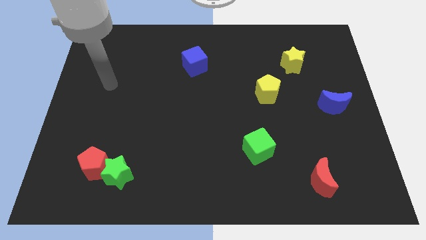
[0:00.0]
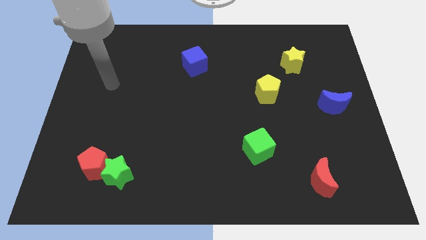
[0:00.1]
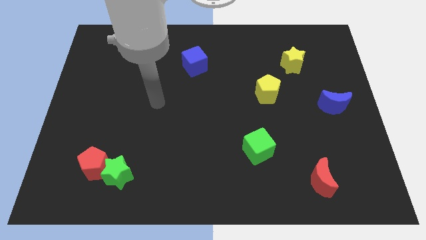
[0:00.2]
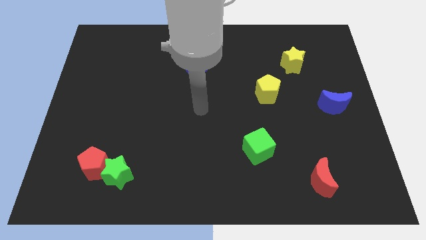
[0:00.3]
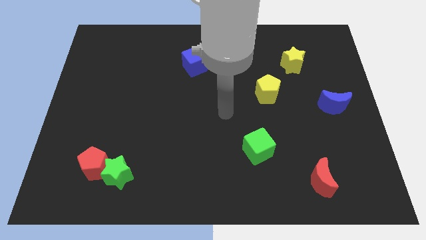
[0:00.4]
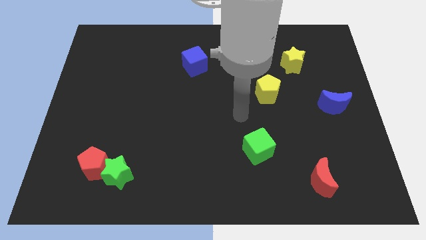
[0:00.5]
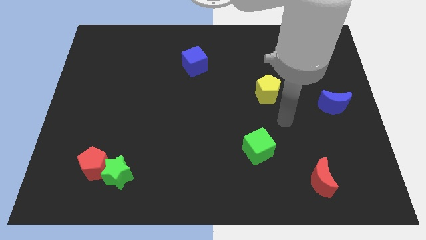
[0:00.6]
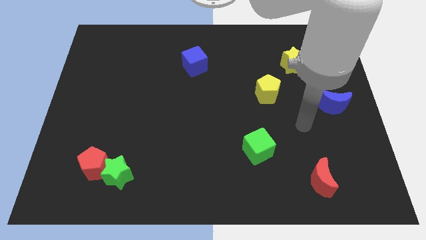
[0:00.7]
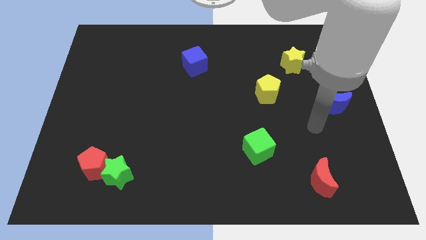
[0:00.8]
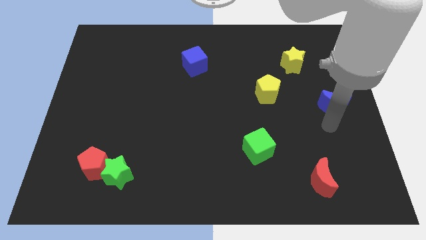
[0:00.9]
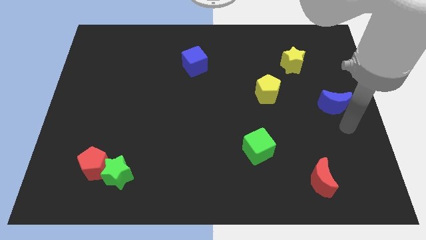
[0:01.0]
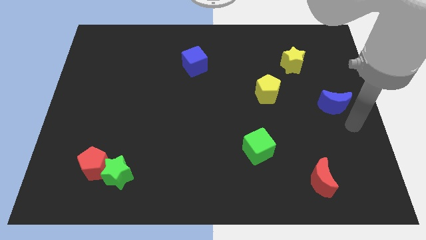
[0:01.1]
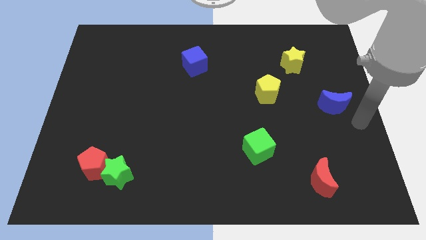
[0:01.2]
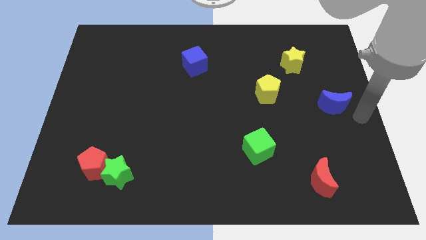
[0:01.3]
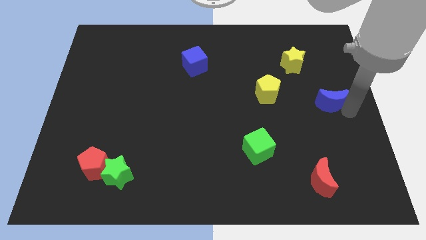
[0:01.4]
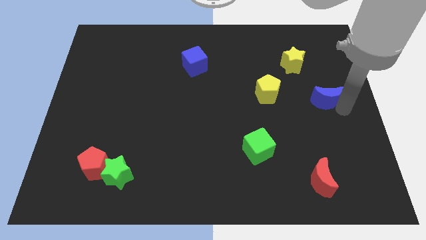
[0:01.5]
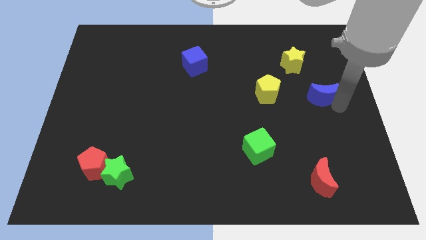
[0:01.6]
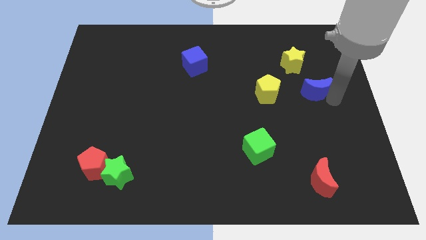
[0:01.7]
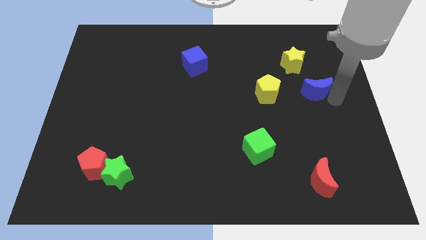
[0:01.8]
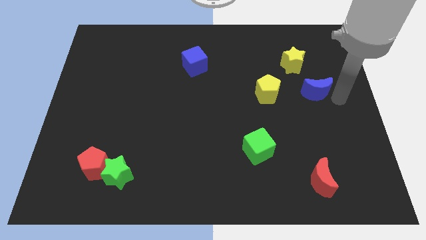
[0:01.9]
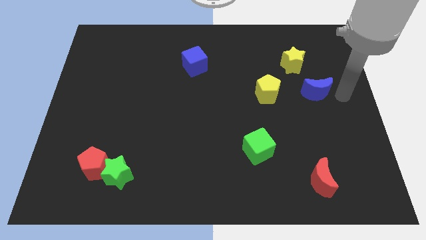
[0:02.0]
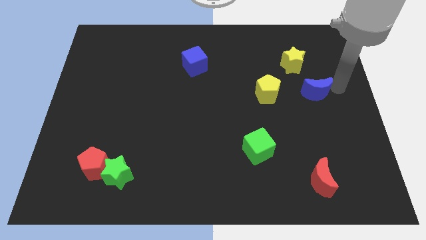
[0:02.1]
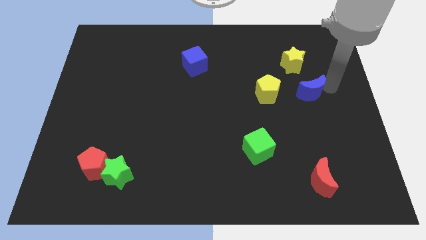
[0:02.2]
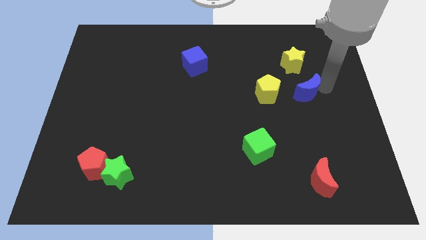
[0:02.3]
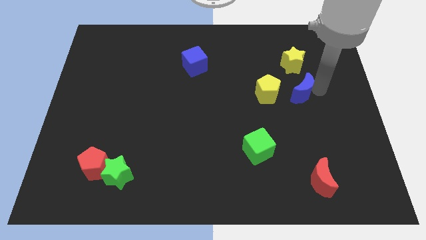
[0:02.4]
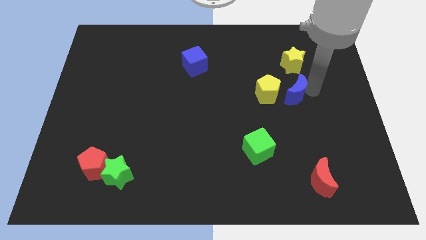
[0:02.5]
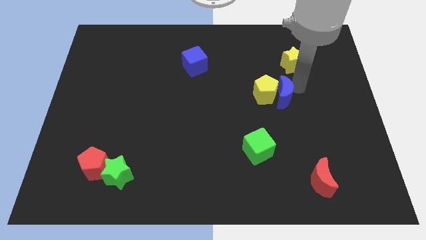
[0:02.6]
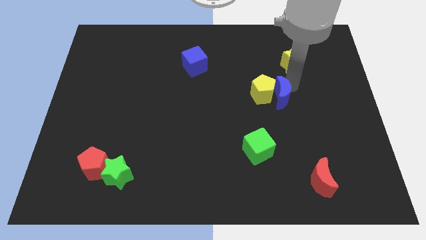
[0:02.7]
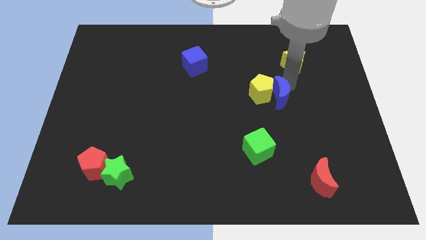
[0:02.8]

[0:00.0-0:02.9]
push the blue moon next to the yellow pentagon

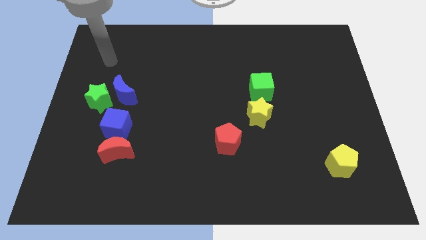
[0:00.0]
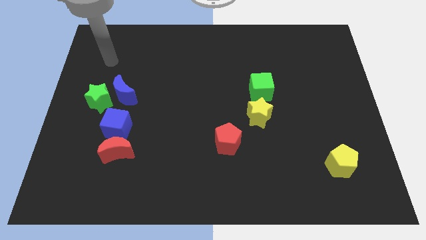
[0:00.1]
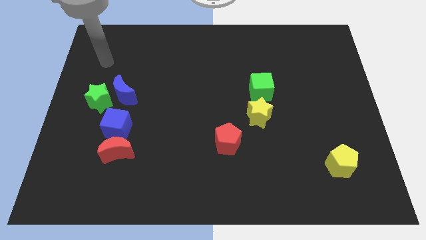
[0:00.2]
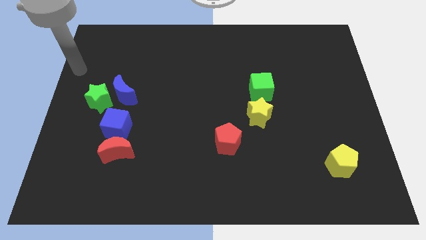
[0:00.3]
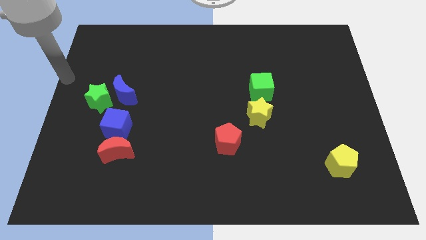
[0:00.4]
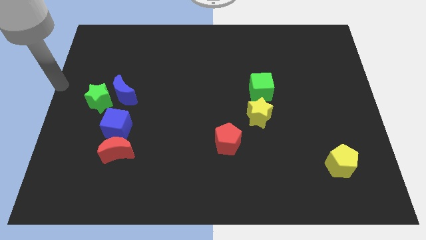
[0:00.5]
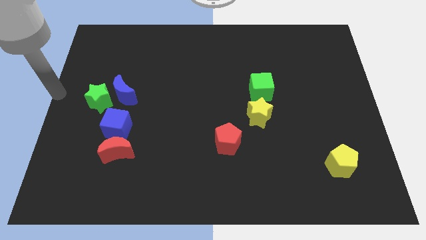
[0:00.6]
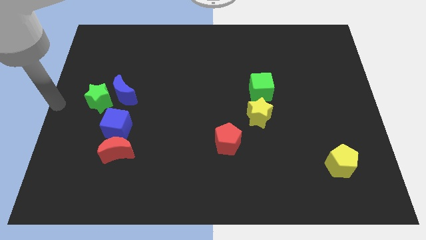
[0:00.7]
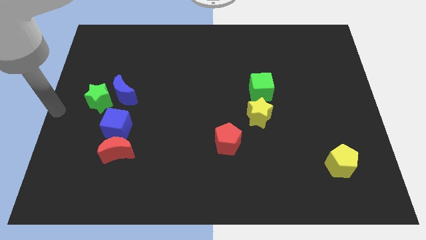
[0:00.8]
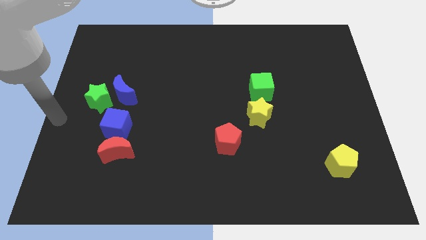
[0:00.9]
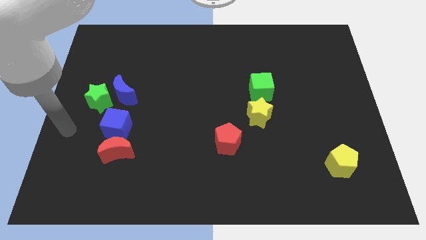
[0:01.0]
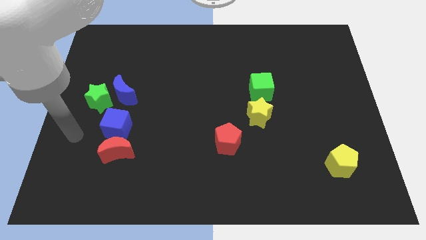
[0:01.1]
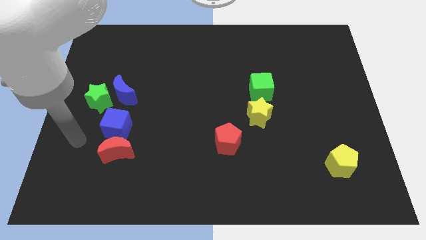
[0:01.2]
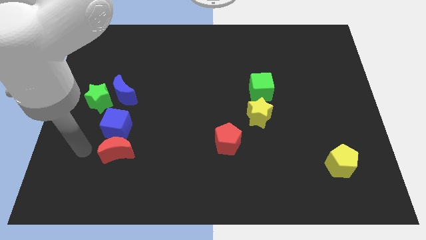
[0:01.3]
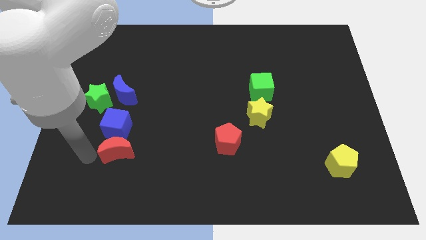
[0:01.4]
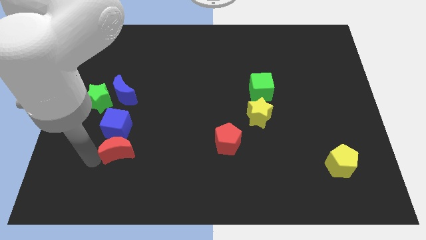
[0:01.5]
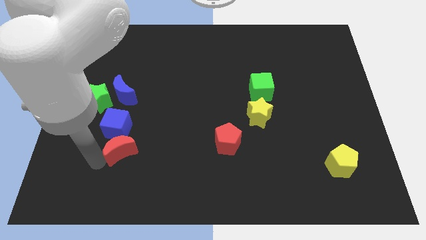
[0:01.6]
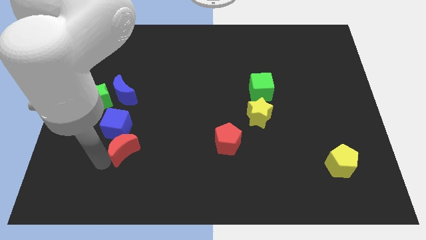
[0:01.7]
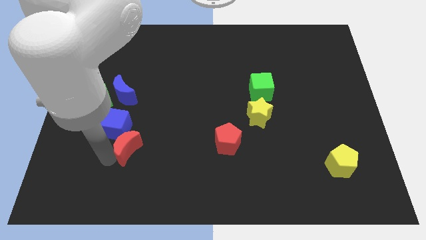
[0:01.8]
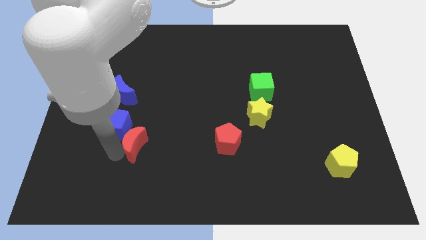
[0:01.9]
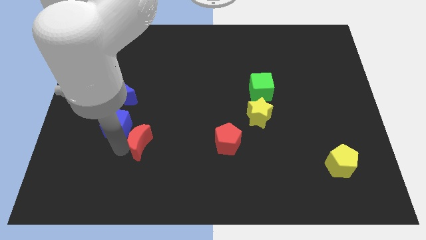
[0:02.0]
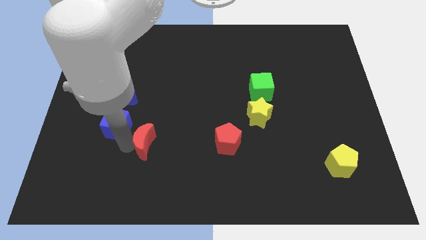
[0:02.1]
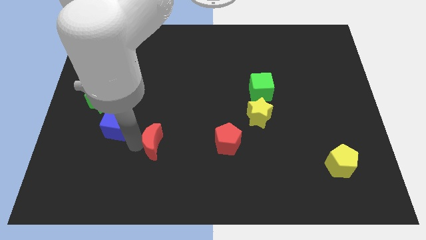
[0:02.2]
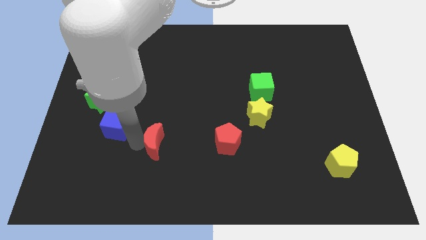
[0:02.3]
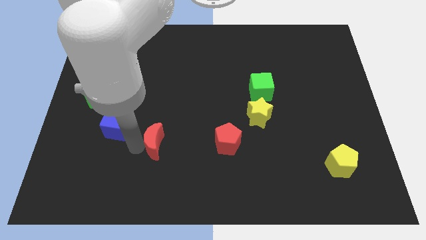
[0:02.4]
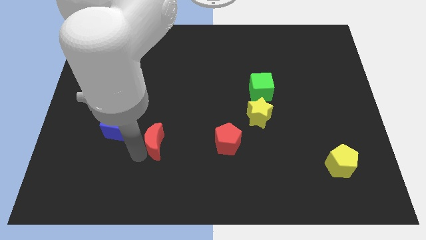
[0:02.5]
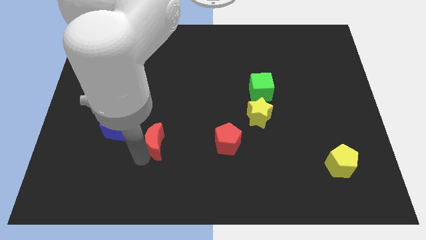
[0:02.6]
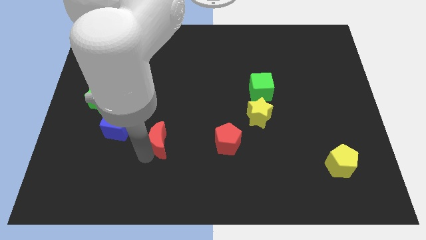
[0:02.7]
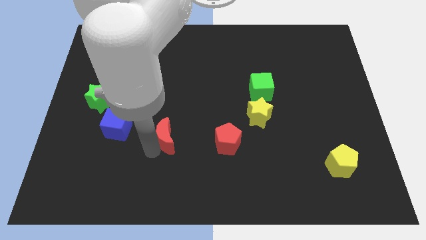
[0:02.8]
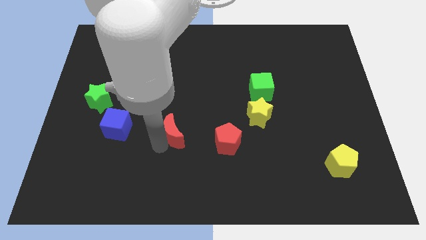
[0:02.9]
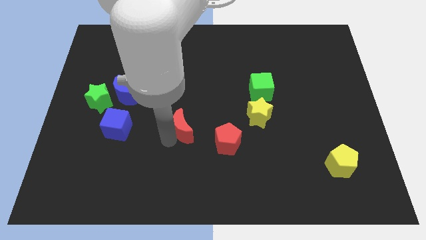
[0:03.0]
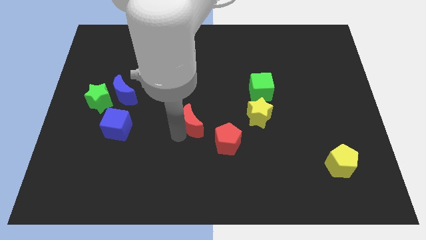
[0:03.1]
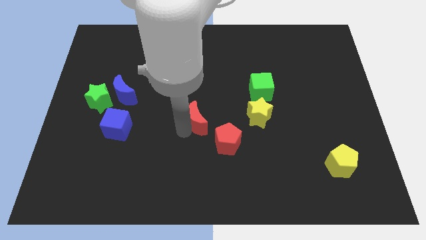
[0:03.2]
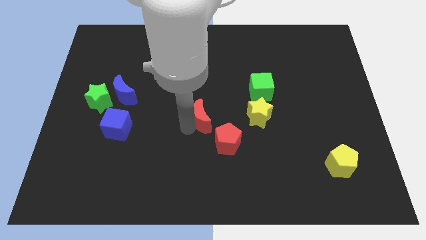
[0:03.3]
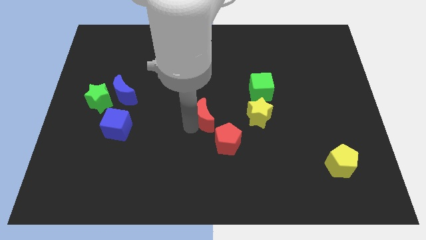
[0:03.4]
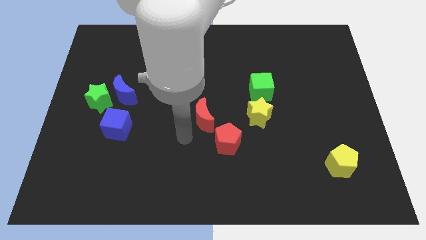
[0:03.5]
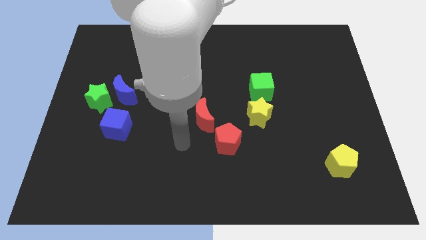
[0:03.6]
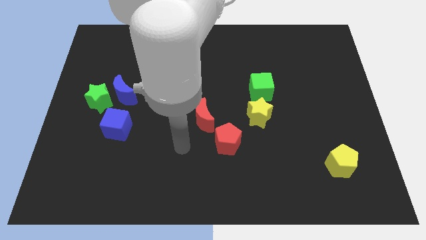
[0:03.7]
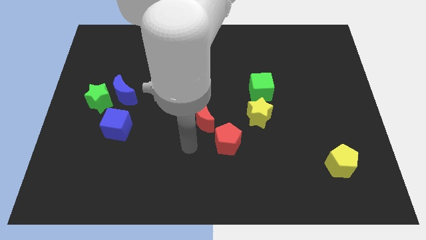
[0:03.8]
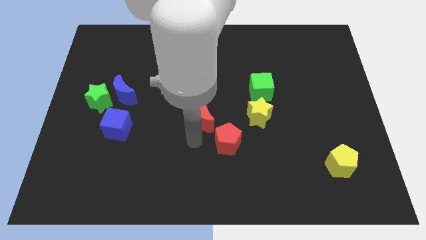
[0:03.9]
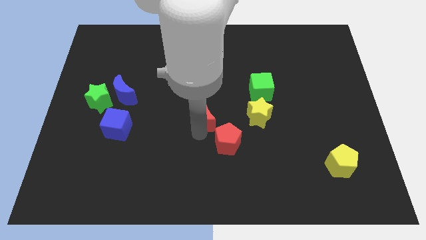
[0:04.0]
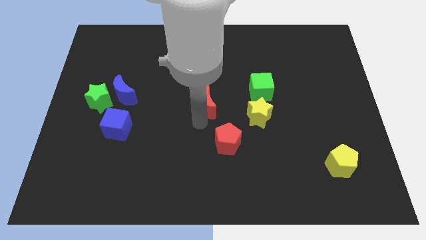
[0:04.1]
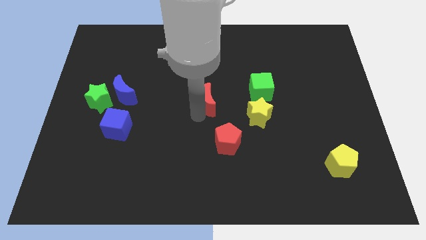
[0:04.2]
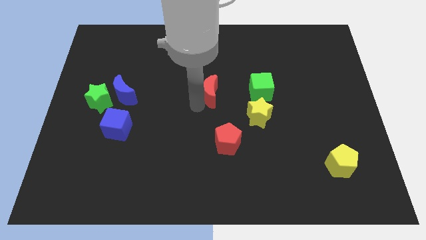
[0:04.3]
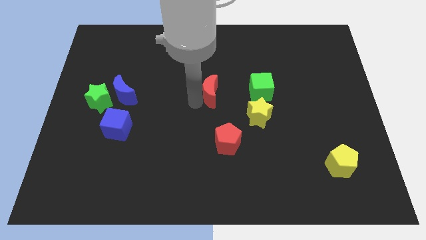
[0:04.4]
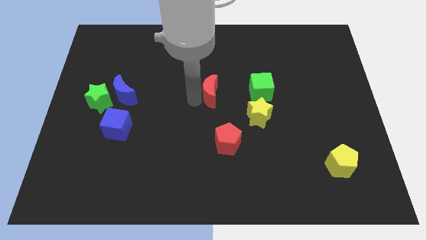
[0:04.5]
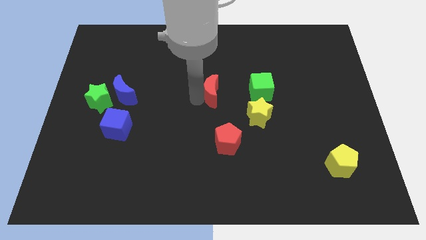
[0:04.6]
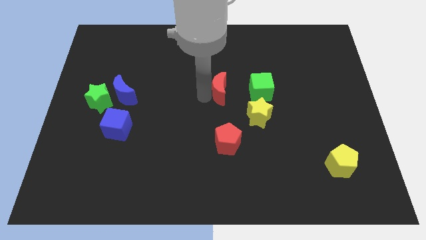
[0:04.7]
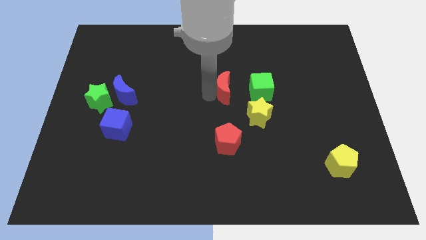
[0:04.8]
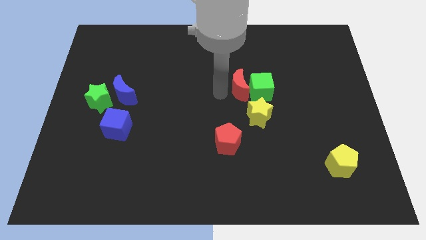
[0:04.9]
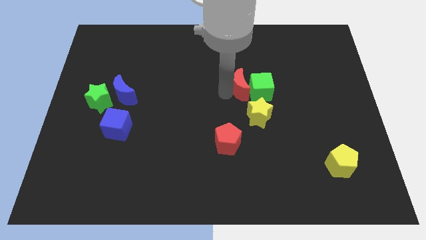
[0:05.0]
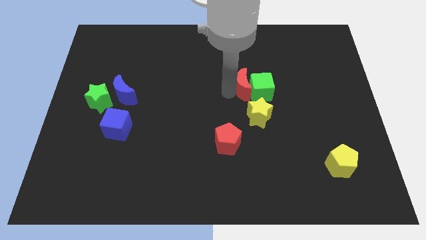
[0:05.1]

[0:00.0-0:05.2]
slide the red moon next to the green cube
